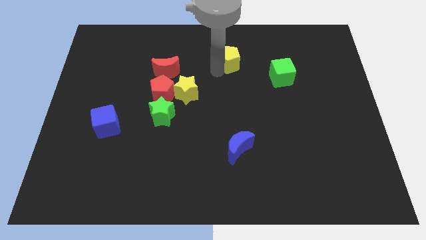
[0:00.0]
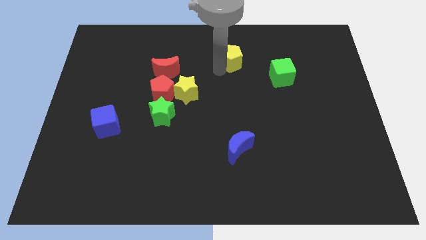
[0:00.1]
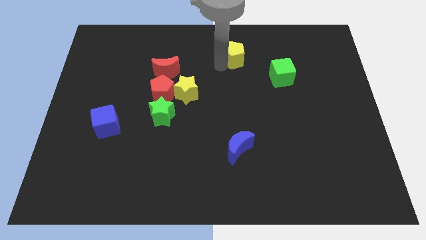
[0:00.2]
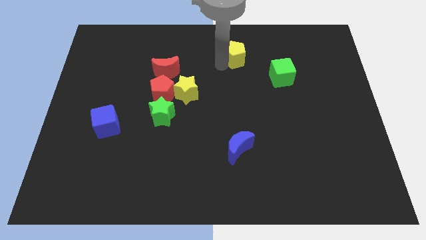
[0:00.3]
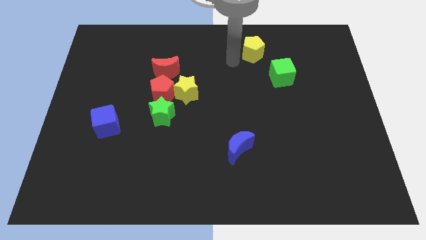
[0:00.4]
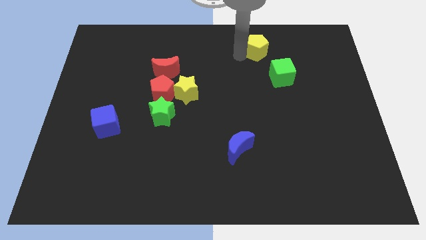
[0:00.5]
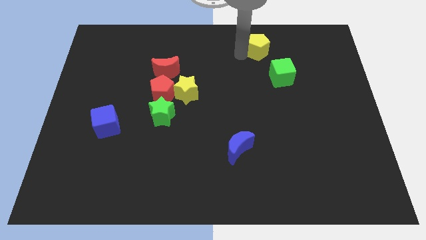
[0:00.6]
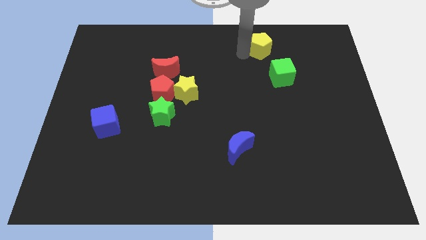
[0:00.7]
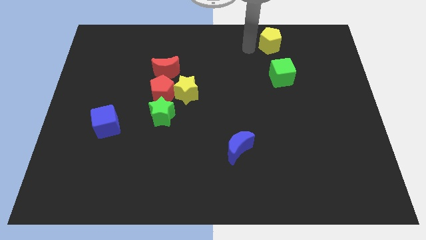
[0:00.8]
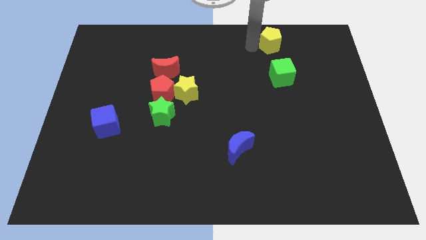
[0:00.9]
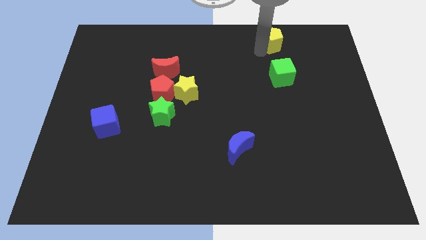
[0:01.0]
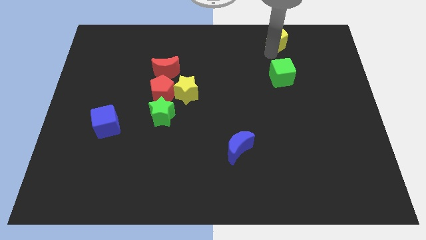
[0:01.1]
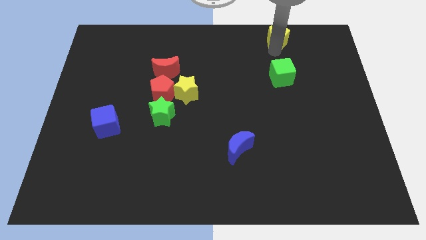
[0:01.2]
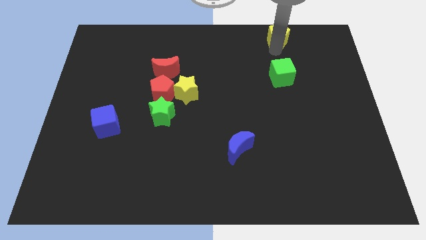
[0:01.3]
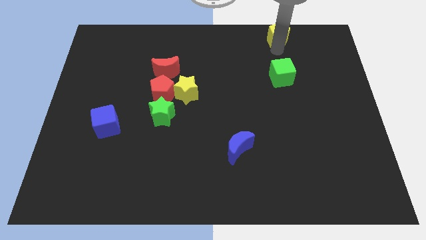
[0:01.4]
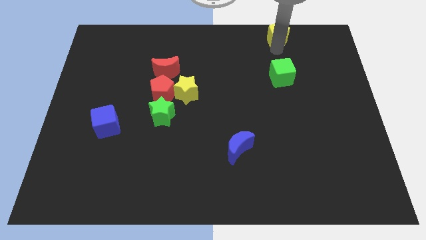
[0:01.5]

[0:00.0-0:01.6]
put the yellow pentagon vertically above the green cube

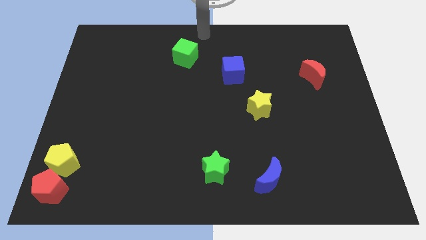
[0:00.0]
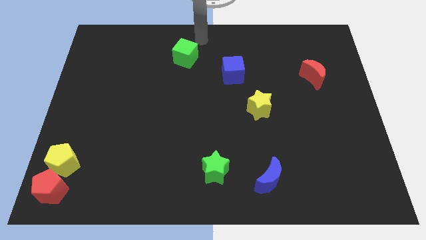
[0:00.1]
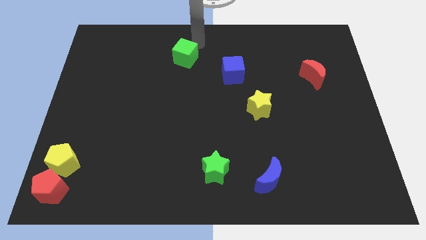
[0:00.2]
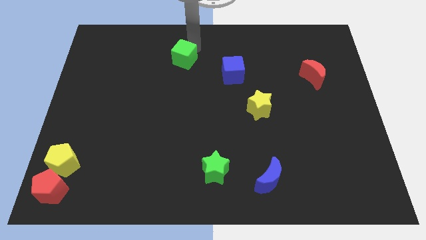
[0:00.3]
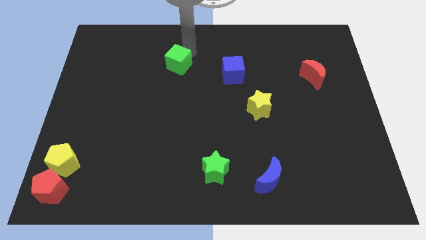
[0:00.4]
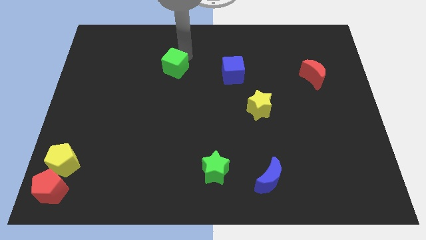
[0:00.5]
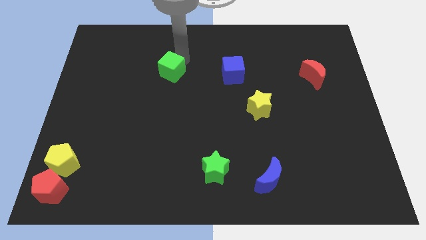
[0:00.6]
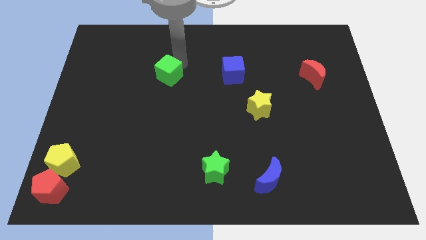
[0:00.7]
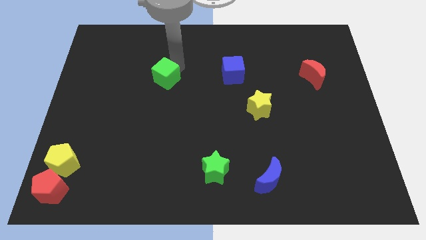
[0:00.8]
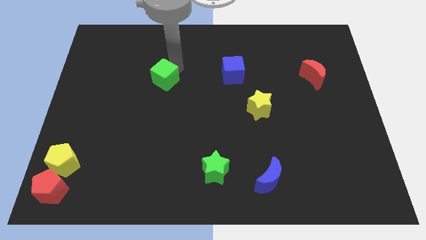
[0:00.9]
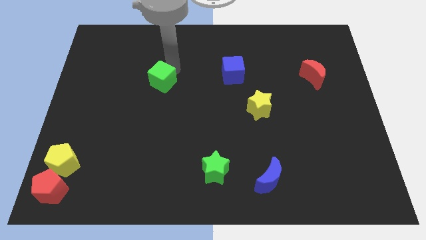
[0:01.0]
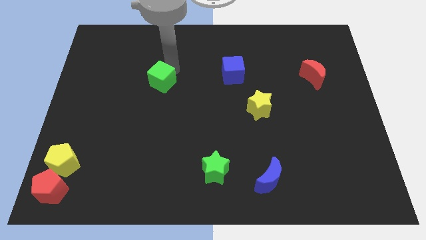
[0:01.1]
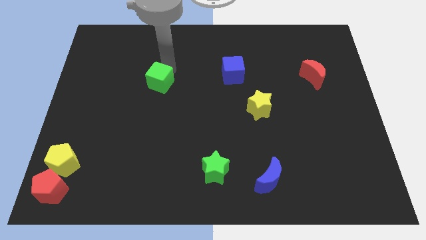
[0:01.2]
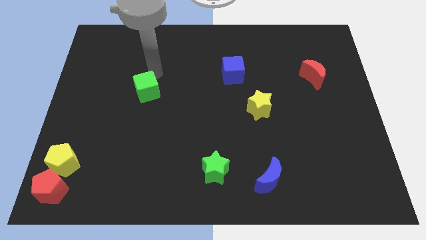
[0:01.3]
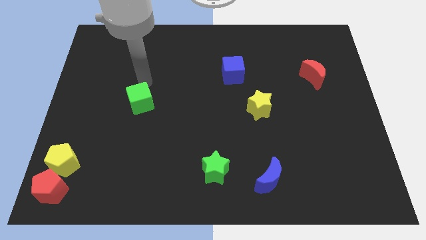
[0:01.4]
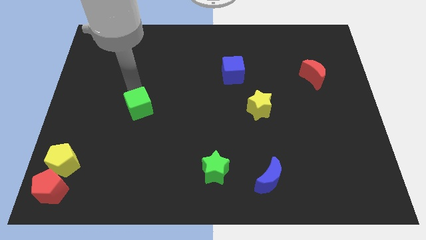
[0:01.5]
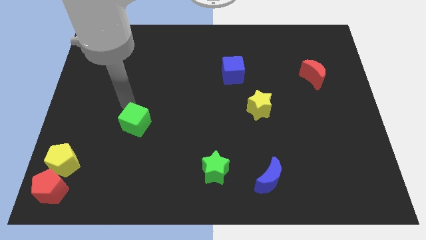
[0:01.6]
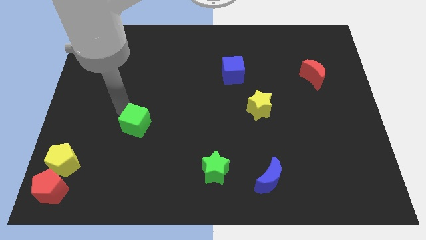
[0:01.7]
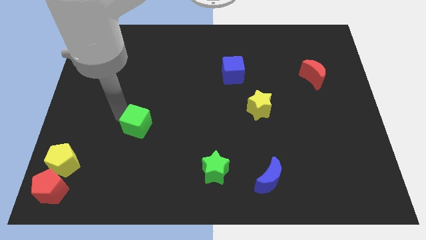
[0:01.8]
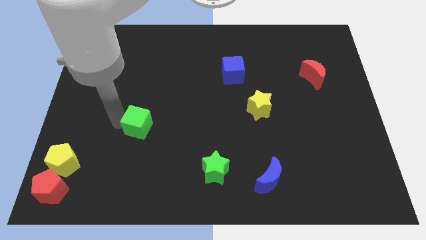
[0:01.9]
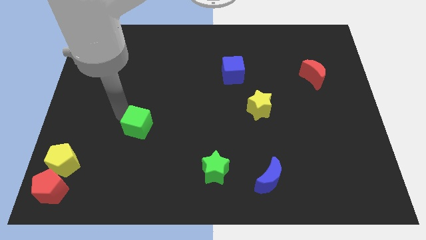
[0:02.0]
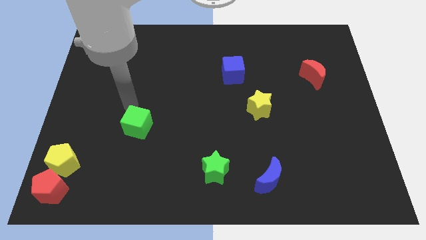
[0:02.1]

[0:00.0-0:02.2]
move the green cube diagonal to the green star

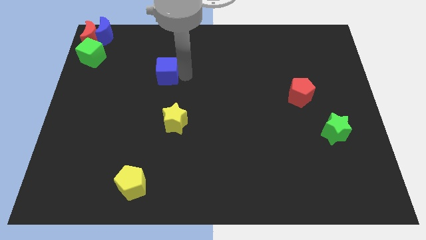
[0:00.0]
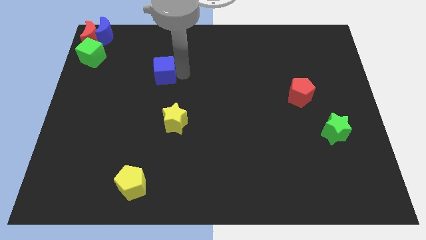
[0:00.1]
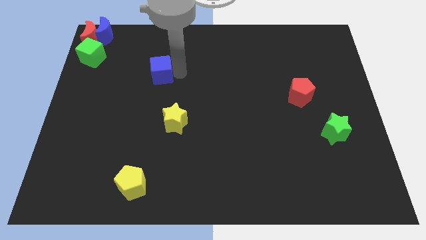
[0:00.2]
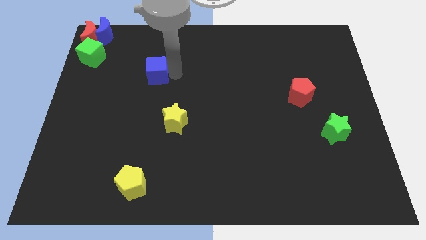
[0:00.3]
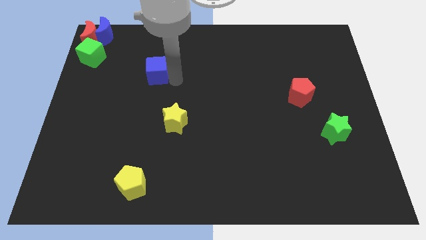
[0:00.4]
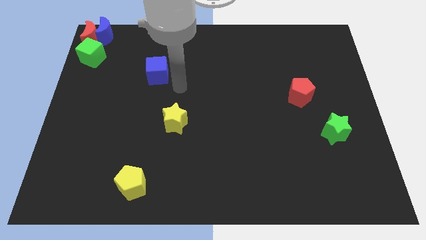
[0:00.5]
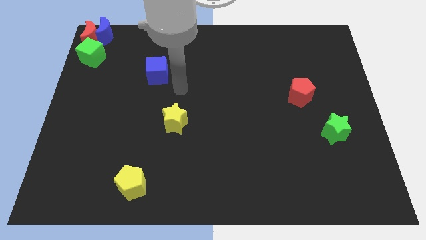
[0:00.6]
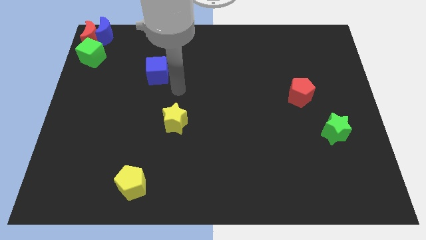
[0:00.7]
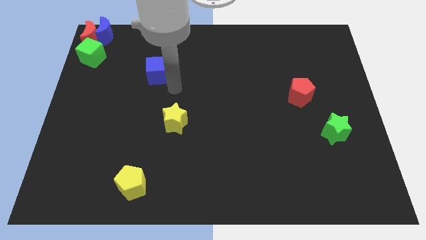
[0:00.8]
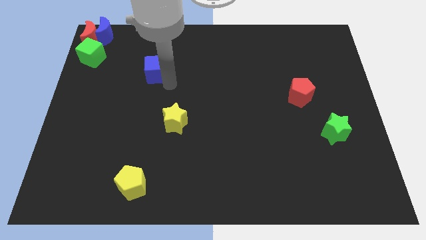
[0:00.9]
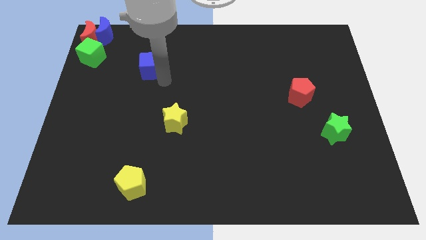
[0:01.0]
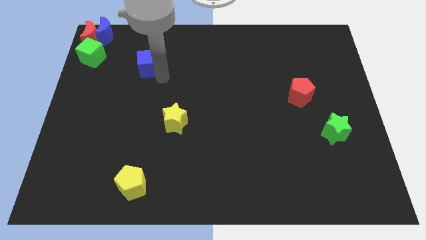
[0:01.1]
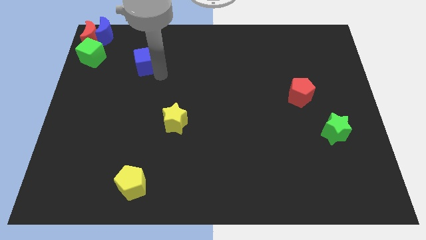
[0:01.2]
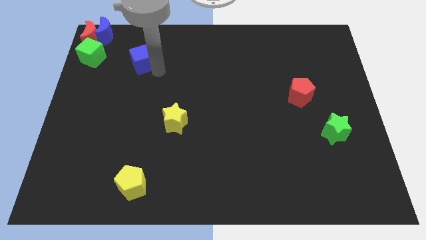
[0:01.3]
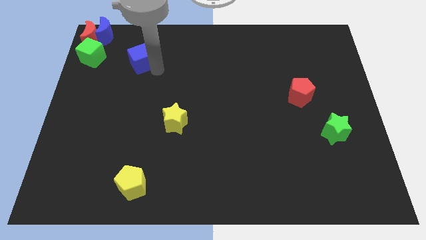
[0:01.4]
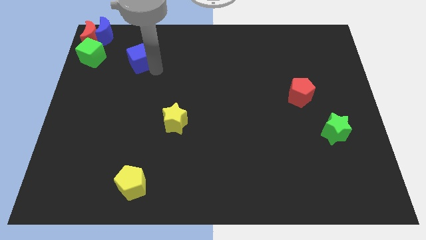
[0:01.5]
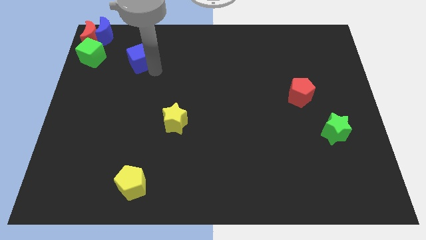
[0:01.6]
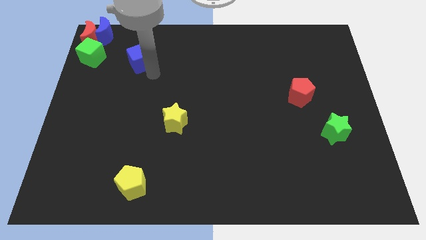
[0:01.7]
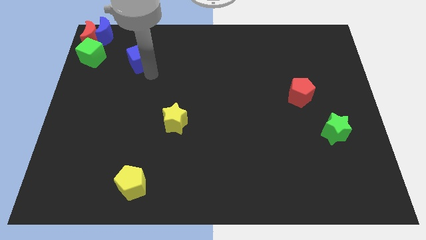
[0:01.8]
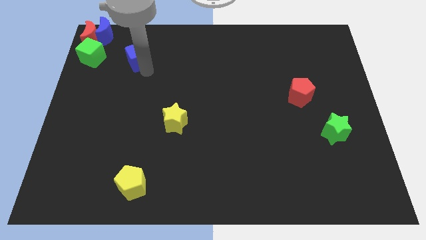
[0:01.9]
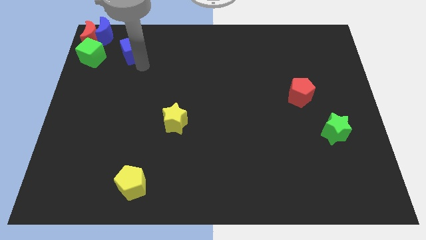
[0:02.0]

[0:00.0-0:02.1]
drag the blue cube to the right of the green cube

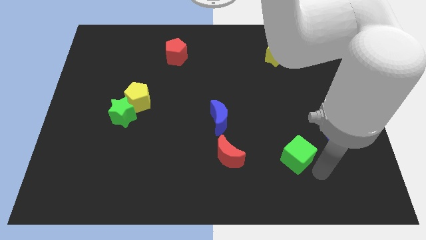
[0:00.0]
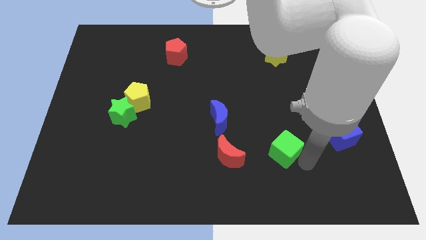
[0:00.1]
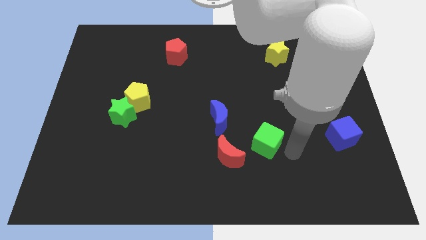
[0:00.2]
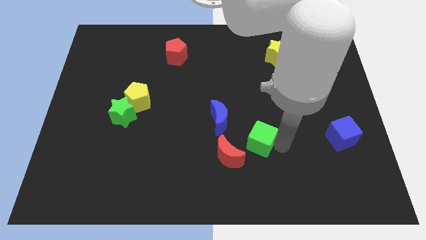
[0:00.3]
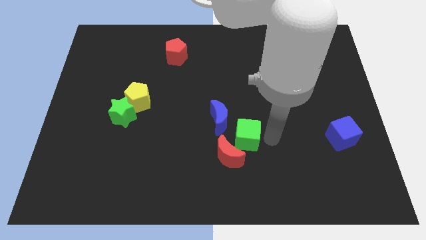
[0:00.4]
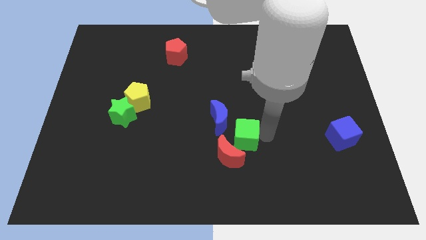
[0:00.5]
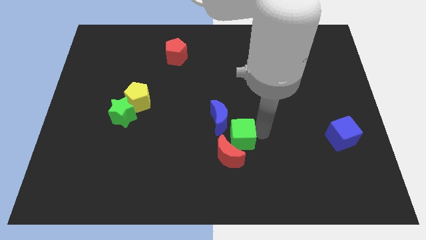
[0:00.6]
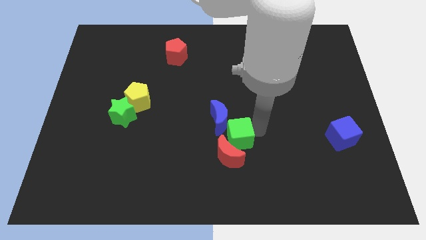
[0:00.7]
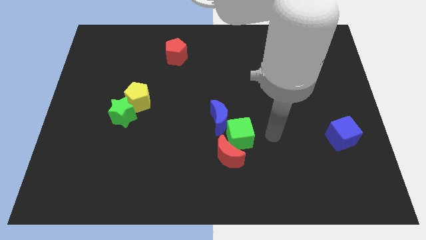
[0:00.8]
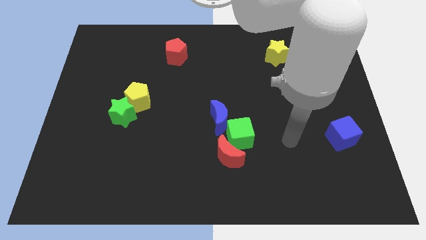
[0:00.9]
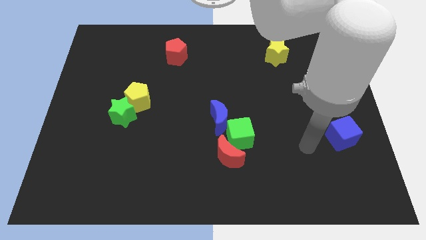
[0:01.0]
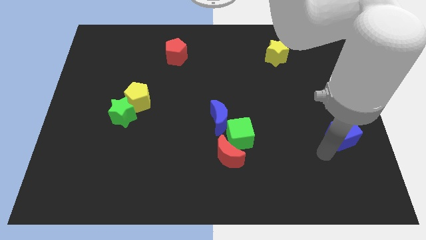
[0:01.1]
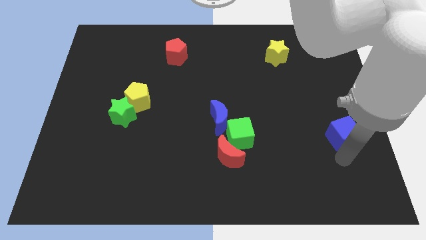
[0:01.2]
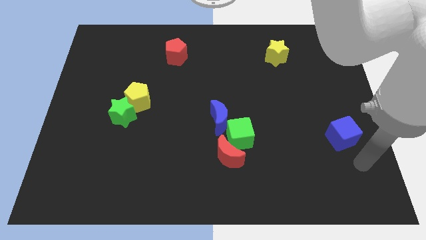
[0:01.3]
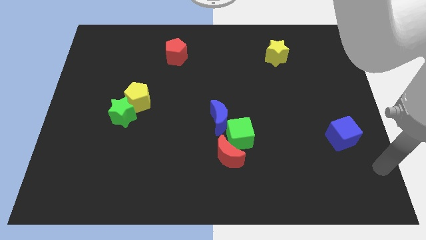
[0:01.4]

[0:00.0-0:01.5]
move the green cube to the top right of the red crescent

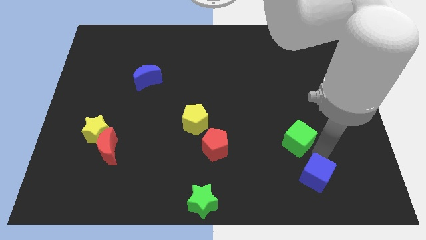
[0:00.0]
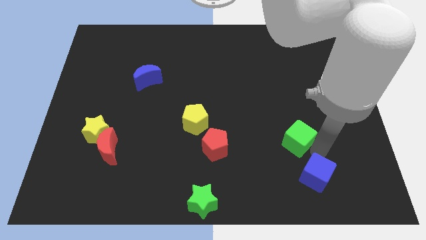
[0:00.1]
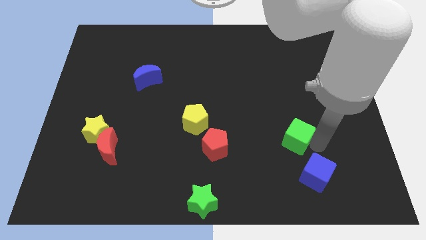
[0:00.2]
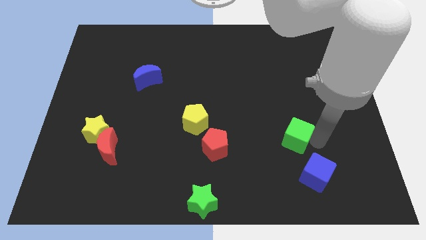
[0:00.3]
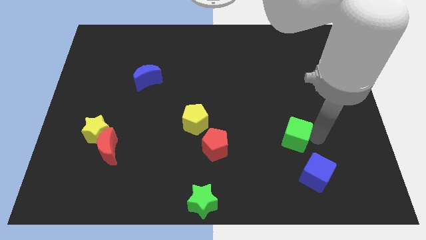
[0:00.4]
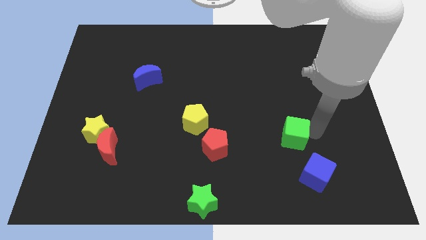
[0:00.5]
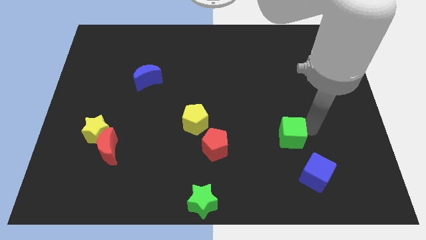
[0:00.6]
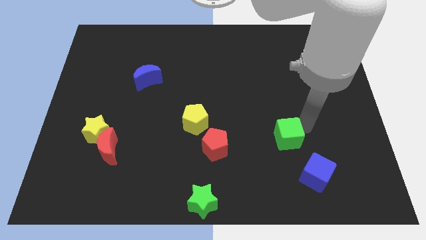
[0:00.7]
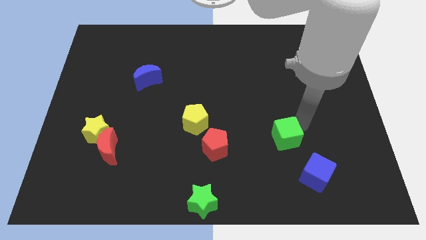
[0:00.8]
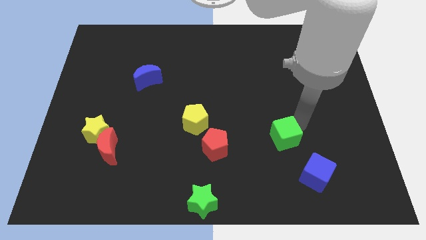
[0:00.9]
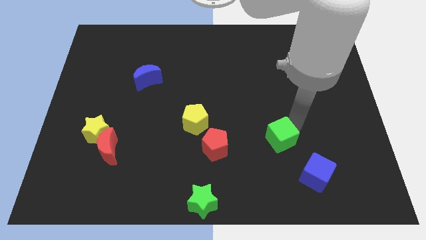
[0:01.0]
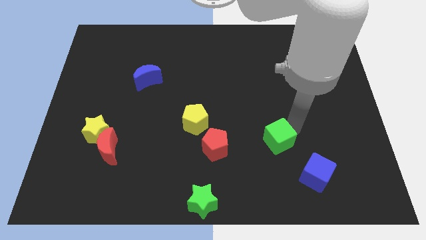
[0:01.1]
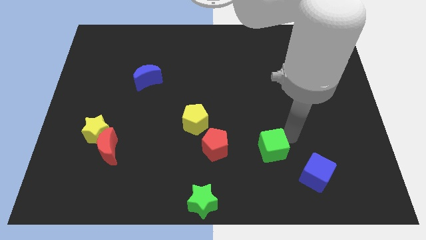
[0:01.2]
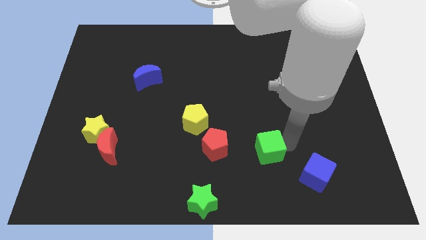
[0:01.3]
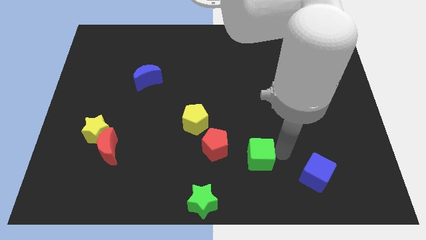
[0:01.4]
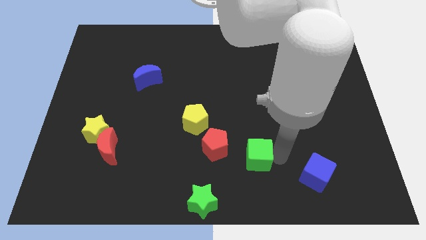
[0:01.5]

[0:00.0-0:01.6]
place the green cube between the red pentagon and blue cube
